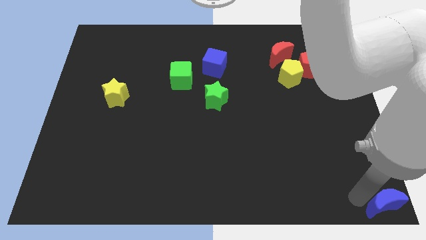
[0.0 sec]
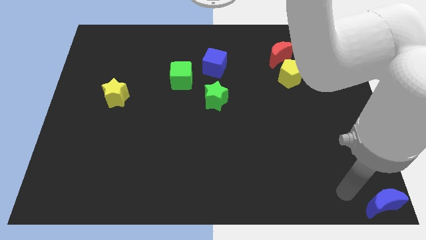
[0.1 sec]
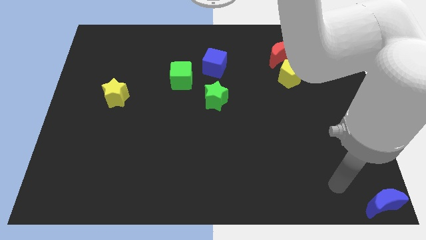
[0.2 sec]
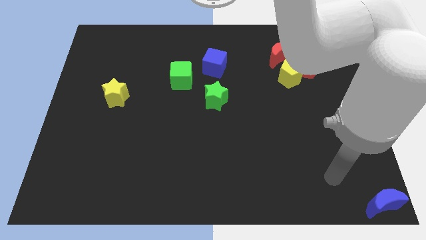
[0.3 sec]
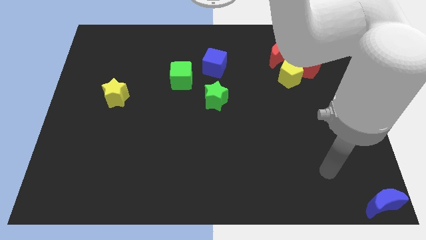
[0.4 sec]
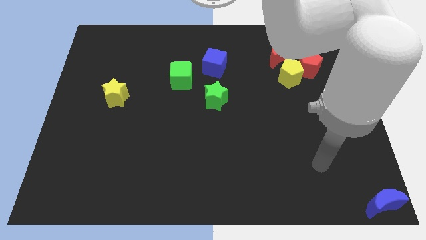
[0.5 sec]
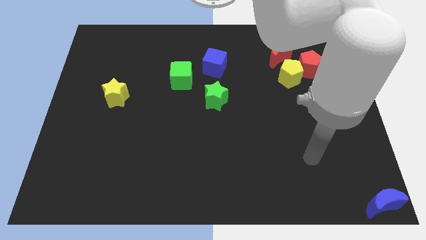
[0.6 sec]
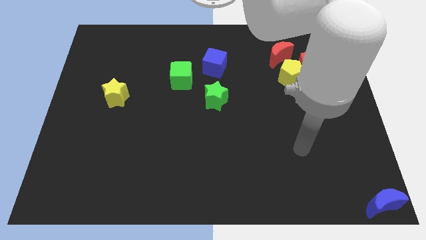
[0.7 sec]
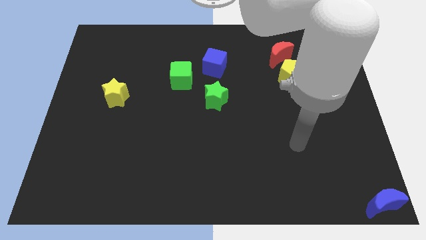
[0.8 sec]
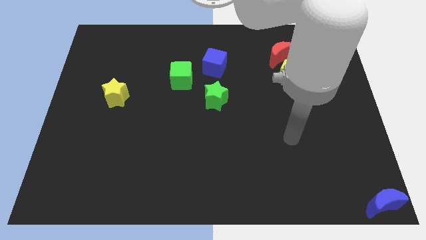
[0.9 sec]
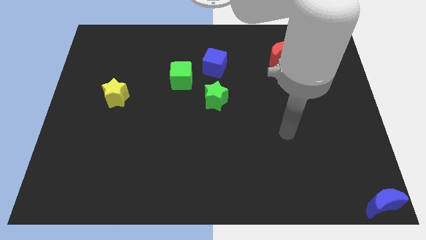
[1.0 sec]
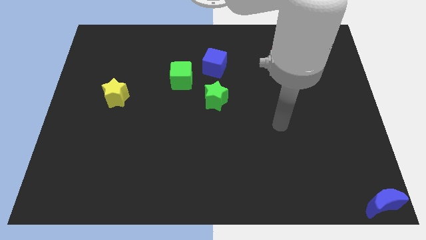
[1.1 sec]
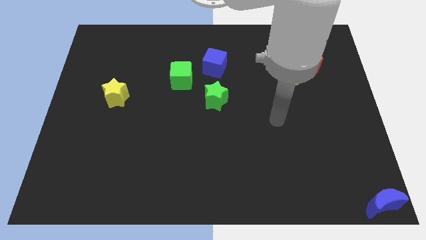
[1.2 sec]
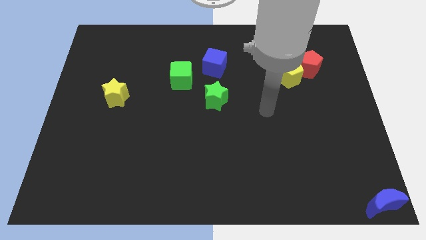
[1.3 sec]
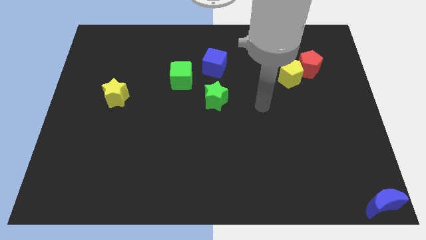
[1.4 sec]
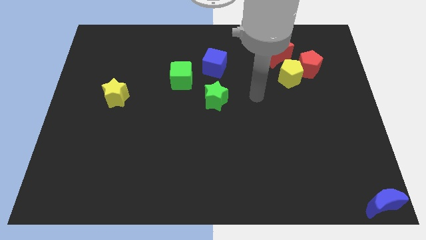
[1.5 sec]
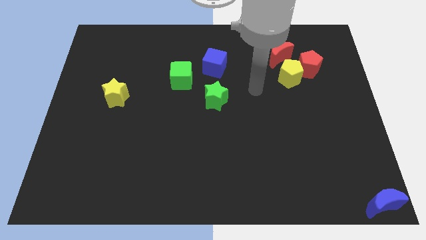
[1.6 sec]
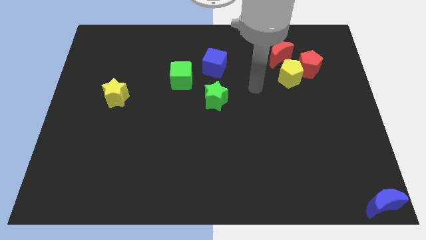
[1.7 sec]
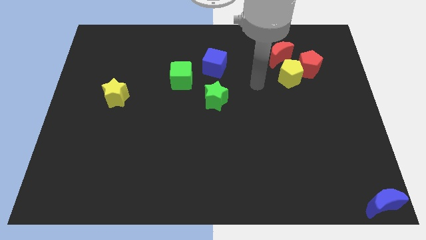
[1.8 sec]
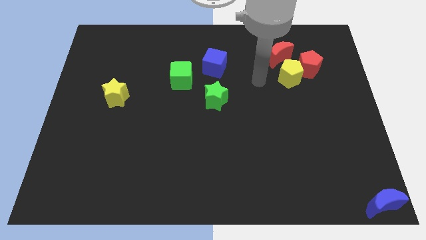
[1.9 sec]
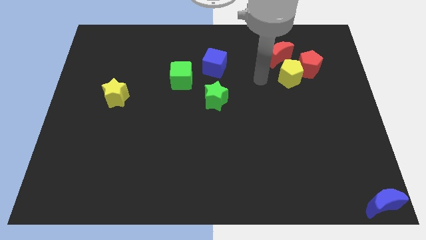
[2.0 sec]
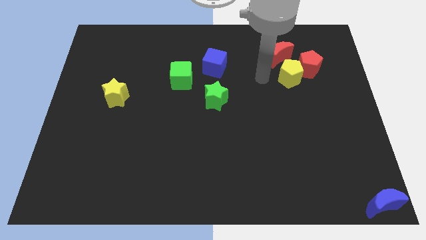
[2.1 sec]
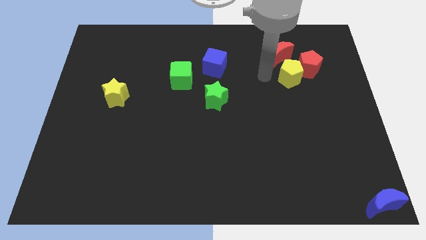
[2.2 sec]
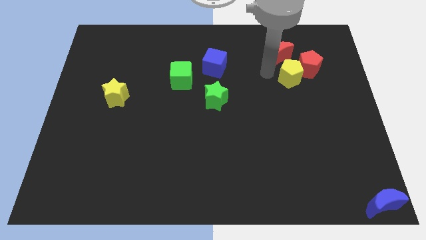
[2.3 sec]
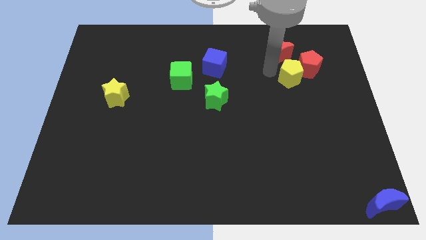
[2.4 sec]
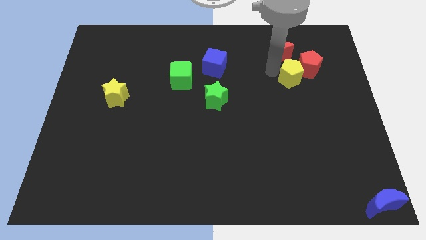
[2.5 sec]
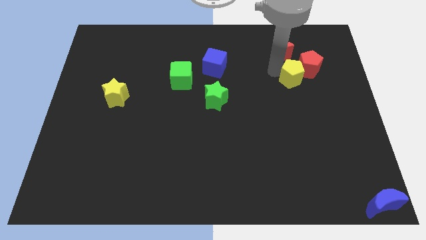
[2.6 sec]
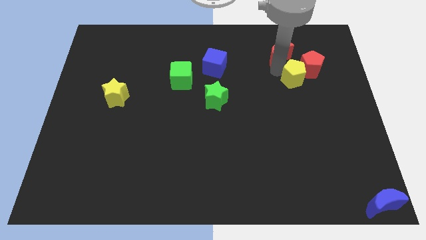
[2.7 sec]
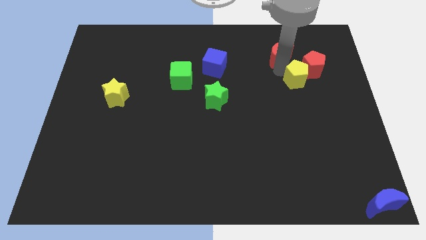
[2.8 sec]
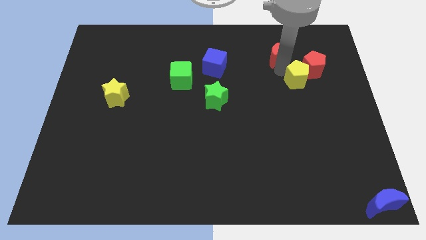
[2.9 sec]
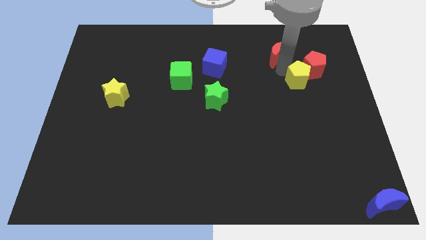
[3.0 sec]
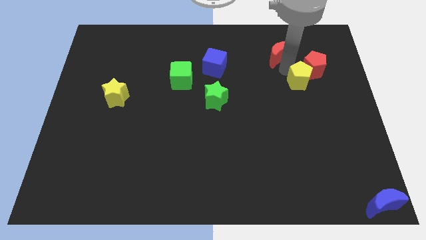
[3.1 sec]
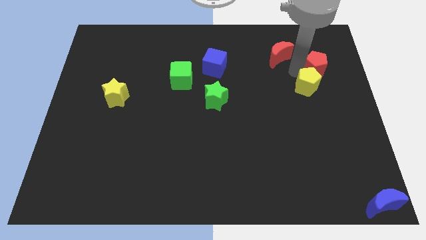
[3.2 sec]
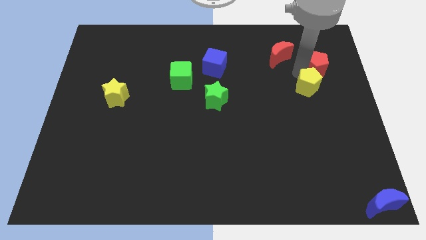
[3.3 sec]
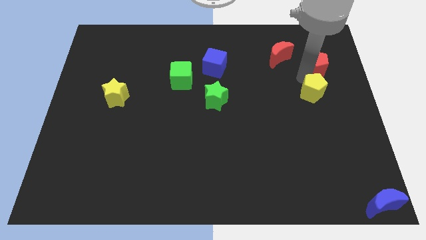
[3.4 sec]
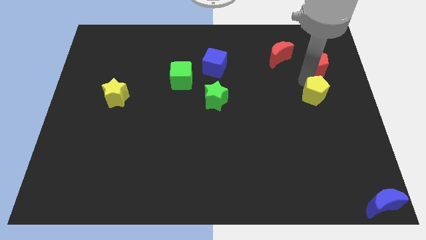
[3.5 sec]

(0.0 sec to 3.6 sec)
put the yellow pentagon below the red pentagon

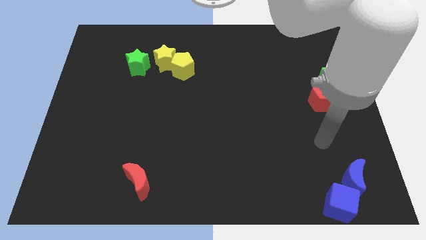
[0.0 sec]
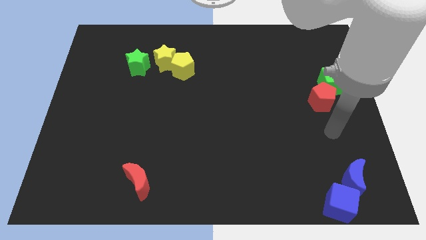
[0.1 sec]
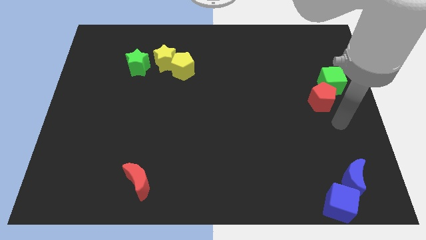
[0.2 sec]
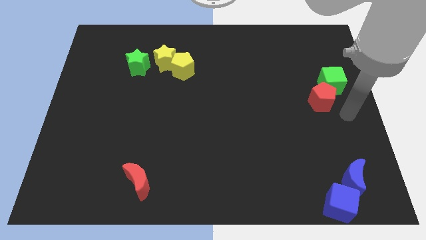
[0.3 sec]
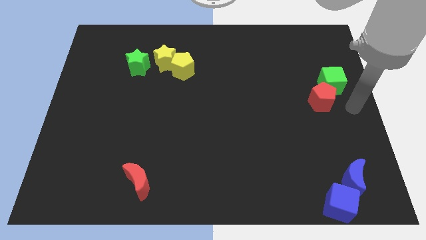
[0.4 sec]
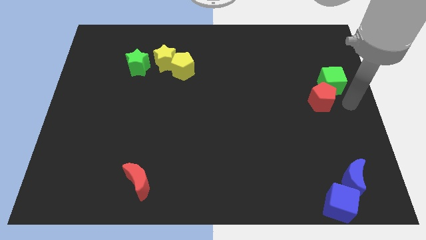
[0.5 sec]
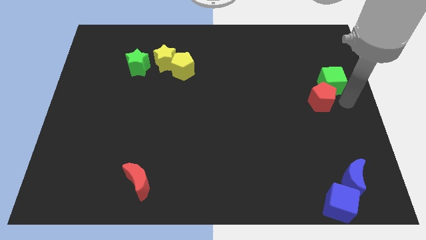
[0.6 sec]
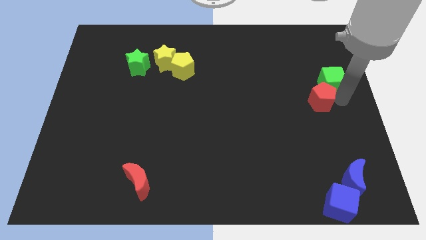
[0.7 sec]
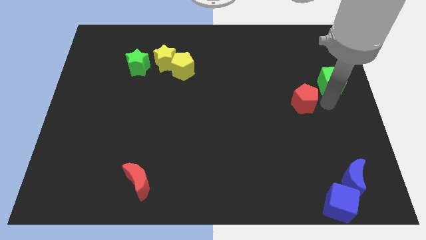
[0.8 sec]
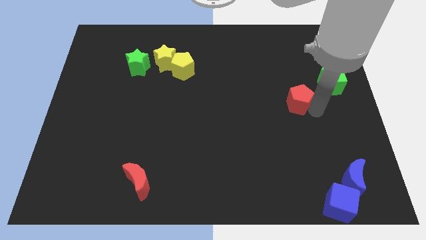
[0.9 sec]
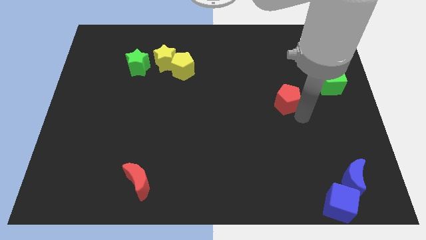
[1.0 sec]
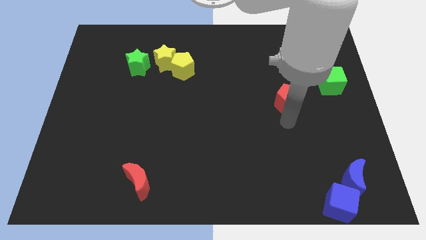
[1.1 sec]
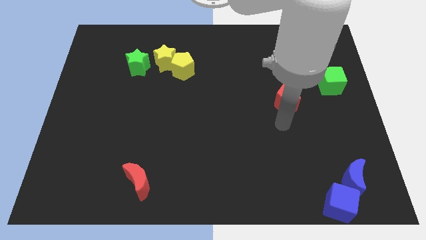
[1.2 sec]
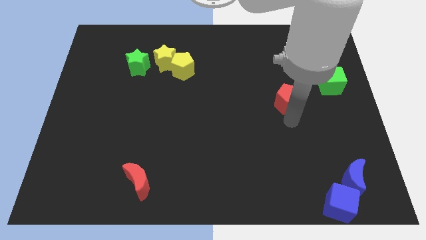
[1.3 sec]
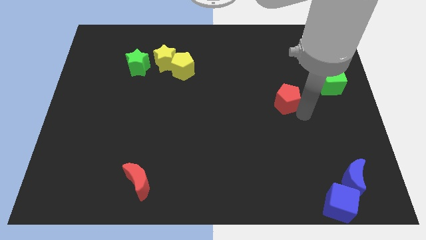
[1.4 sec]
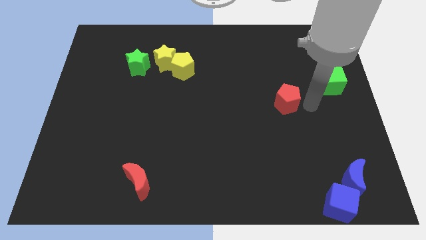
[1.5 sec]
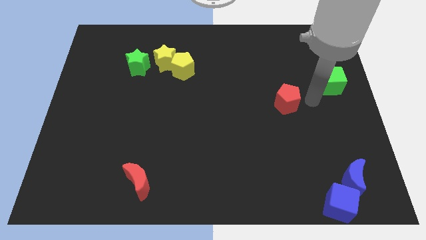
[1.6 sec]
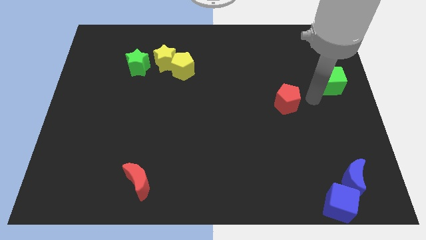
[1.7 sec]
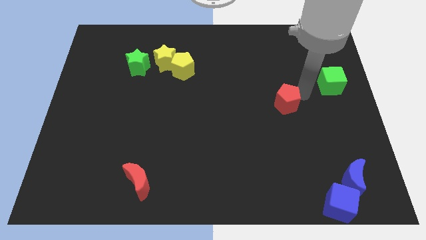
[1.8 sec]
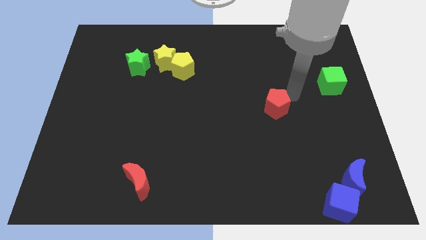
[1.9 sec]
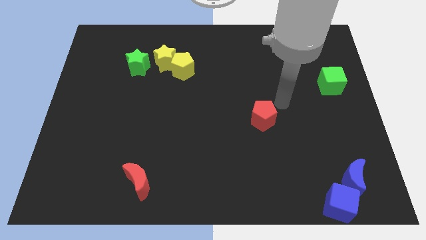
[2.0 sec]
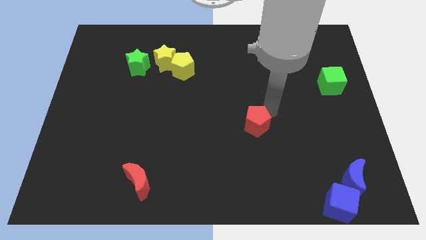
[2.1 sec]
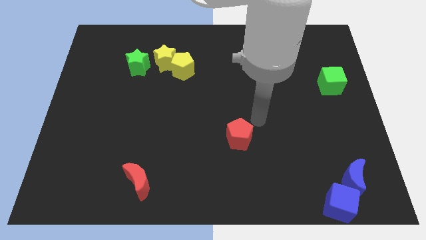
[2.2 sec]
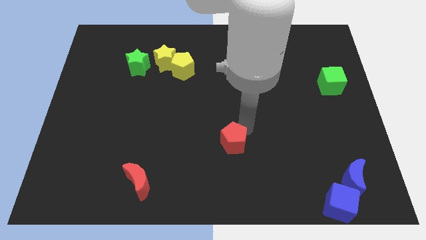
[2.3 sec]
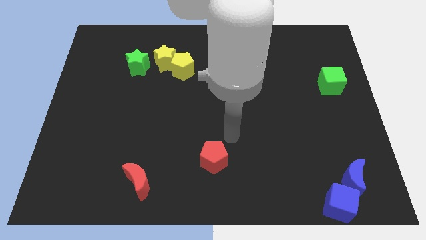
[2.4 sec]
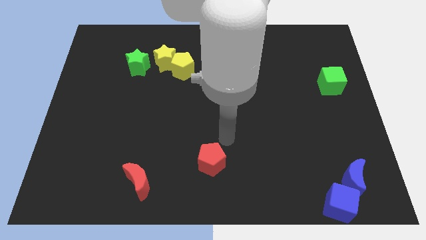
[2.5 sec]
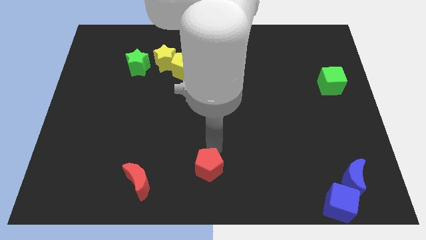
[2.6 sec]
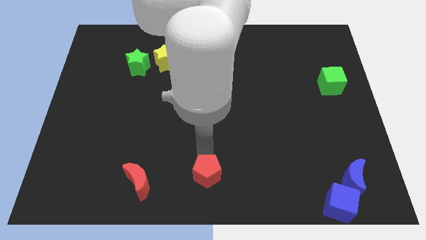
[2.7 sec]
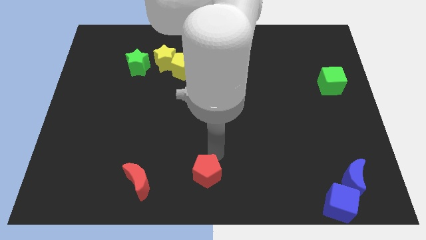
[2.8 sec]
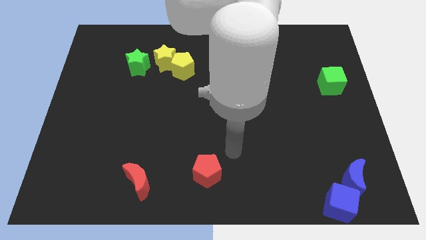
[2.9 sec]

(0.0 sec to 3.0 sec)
move the red pentagon between the red moon and blue moon

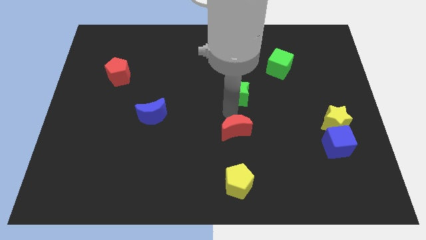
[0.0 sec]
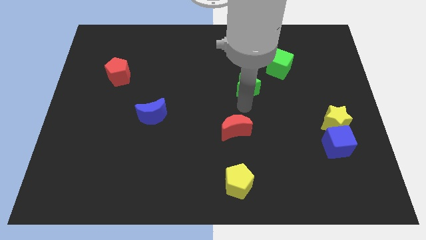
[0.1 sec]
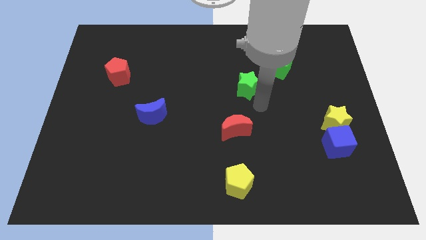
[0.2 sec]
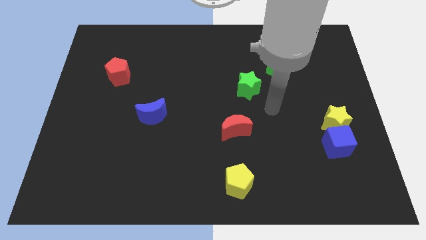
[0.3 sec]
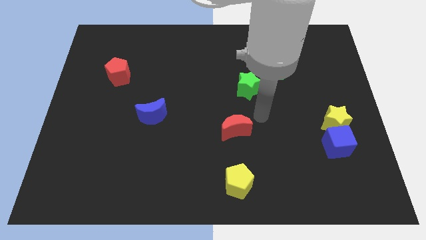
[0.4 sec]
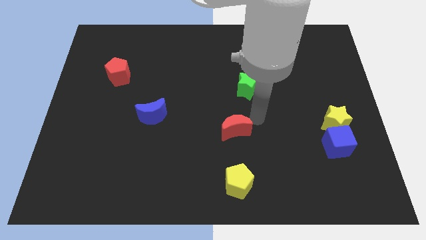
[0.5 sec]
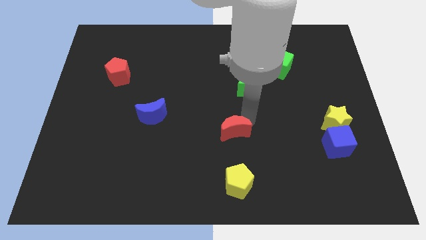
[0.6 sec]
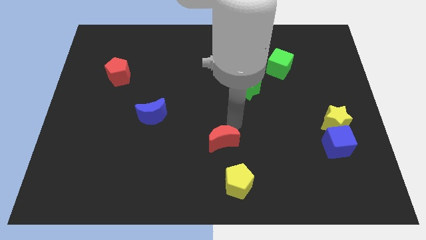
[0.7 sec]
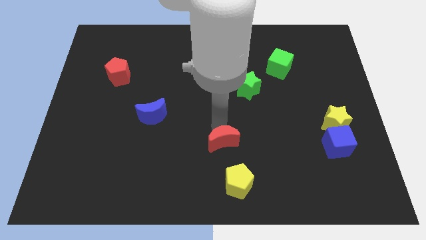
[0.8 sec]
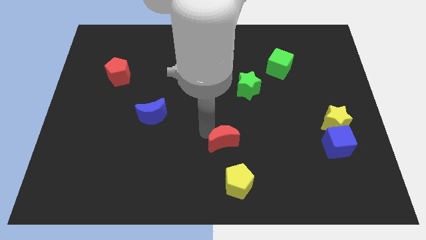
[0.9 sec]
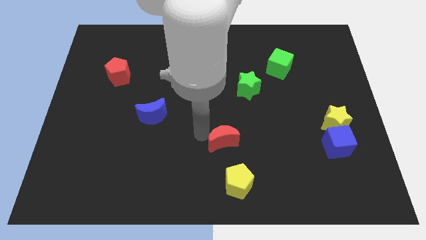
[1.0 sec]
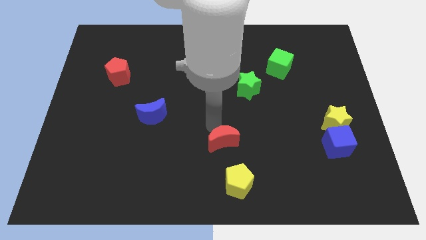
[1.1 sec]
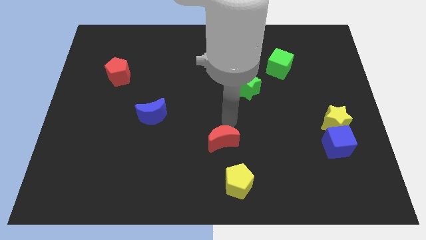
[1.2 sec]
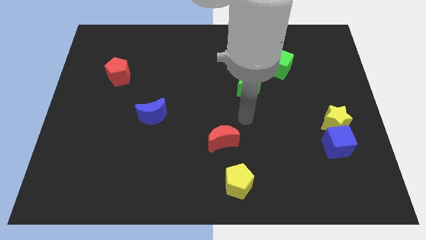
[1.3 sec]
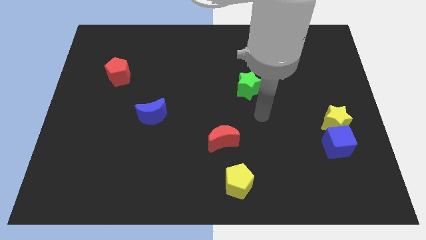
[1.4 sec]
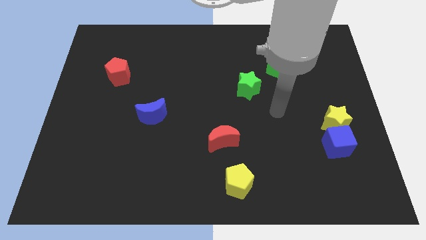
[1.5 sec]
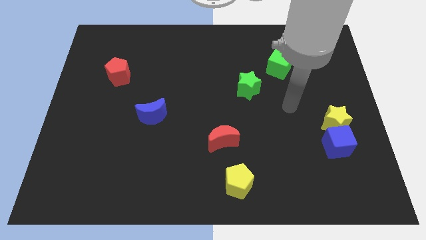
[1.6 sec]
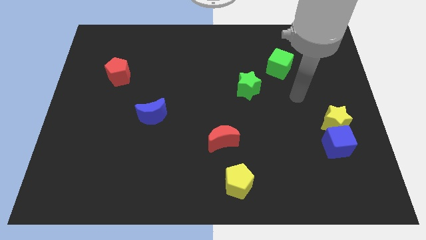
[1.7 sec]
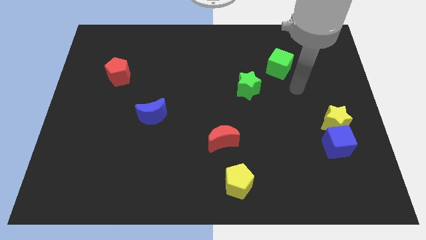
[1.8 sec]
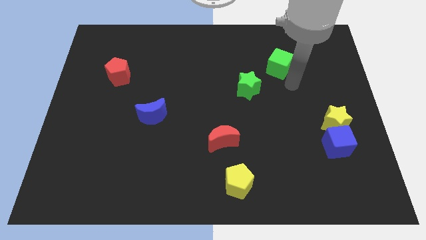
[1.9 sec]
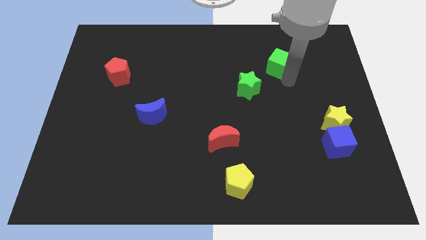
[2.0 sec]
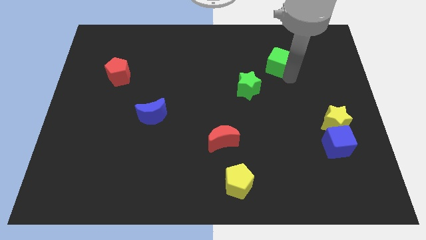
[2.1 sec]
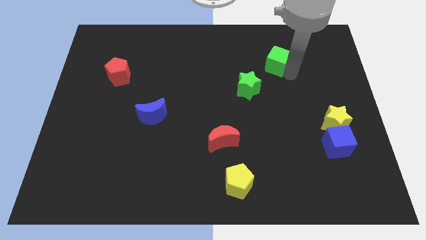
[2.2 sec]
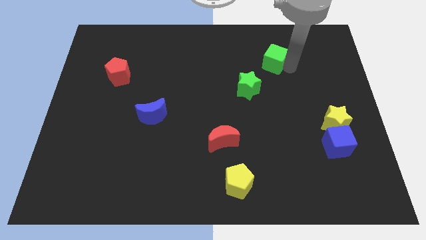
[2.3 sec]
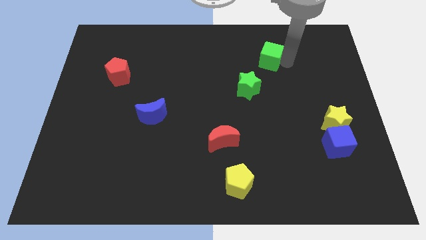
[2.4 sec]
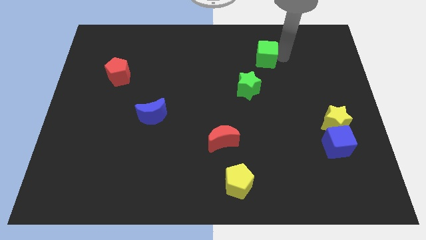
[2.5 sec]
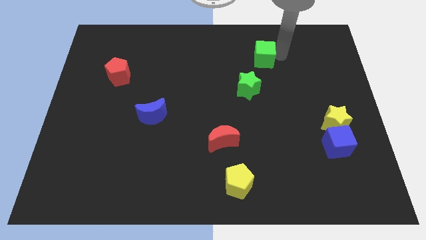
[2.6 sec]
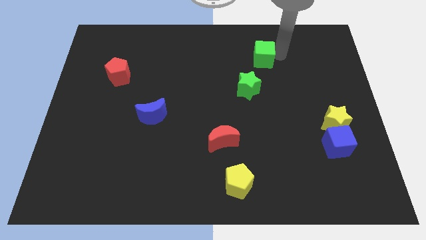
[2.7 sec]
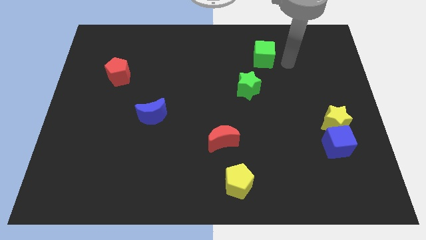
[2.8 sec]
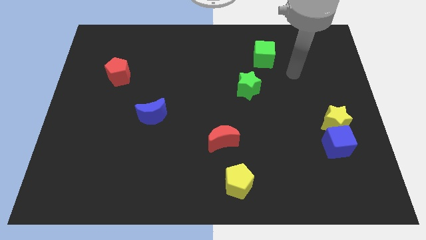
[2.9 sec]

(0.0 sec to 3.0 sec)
arrange the red moon green star green cube in a diagonal line
